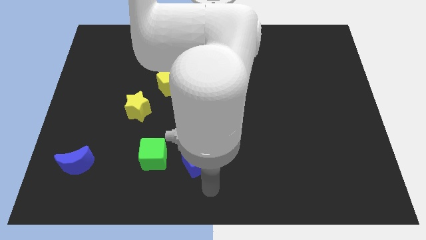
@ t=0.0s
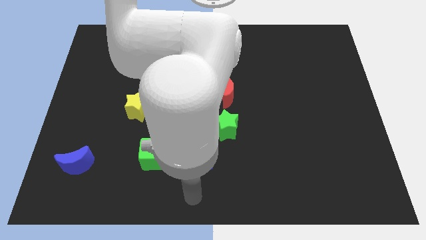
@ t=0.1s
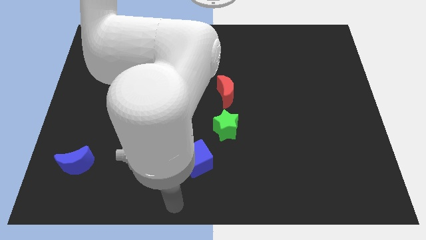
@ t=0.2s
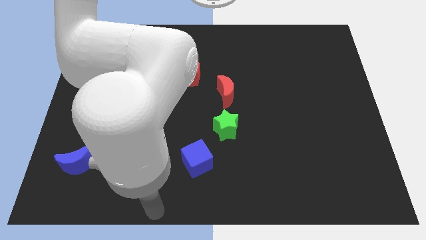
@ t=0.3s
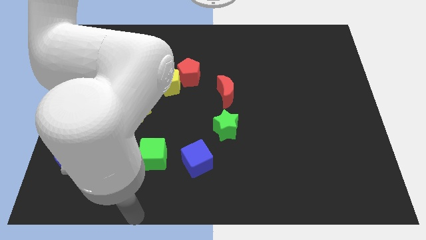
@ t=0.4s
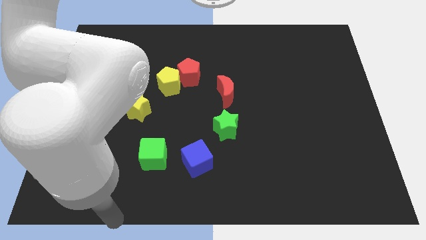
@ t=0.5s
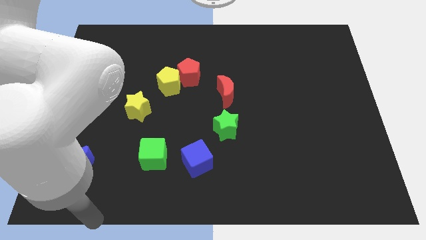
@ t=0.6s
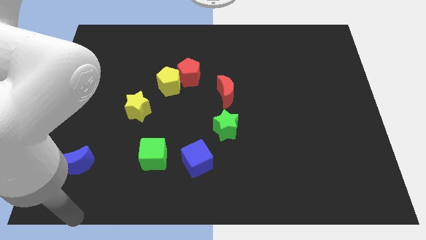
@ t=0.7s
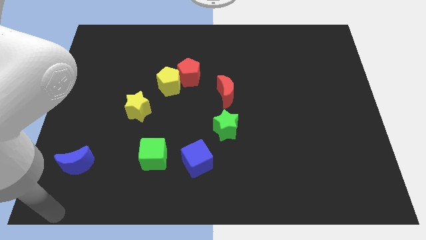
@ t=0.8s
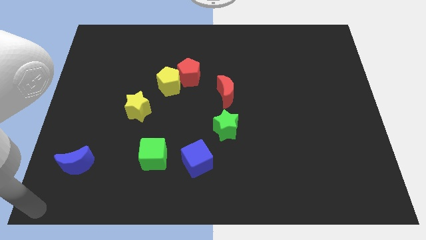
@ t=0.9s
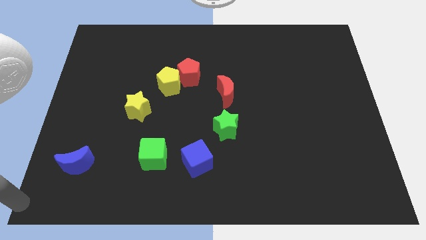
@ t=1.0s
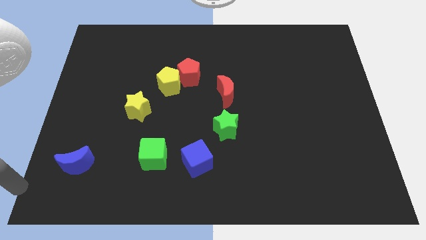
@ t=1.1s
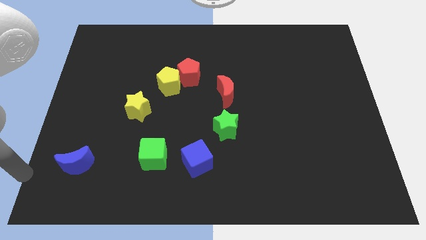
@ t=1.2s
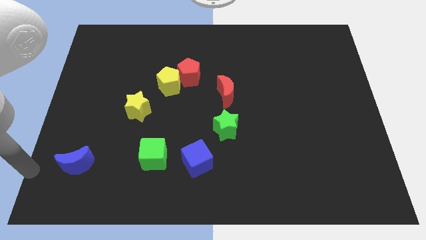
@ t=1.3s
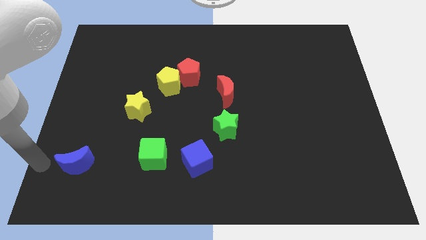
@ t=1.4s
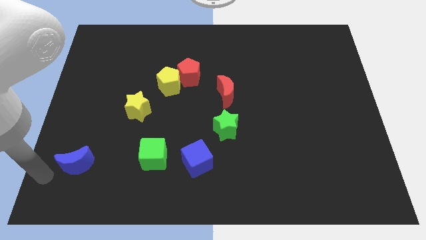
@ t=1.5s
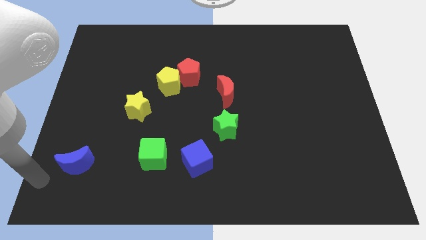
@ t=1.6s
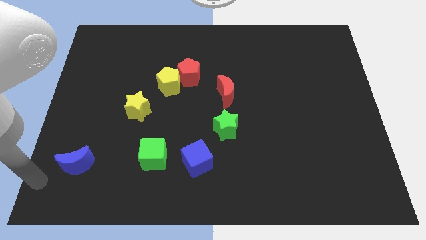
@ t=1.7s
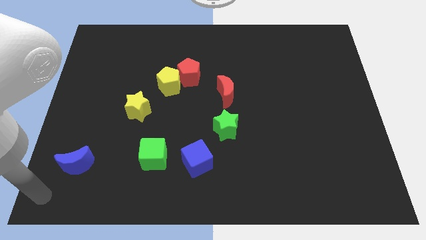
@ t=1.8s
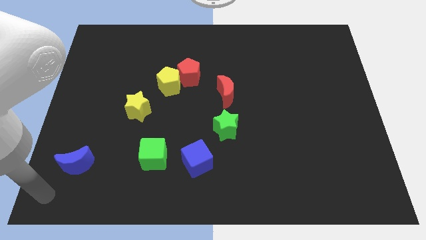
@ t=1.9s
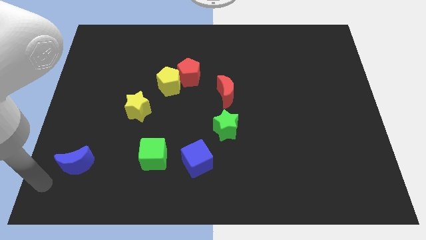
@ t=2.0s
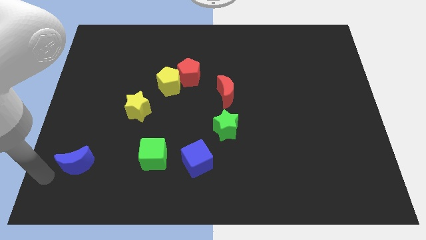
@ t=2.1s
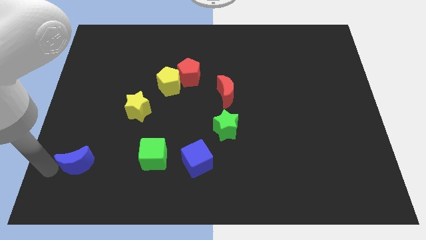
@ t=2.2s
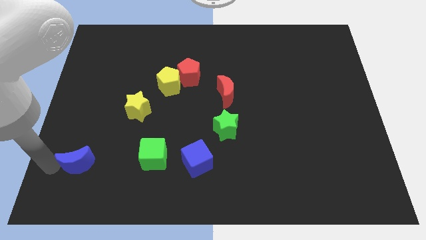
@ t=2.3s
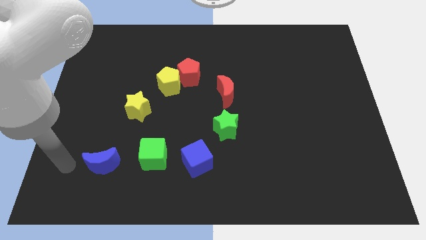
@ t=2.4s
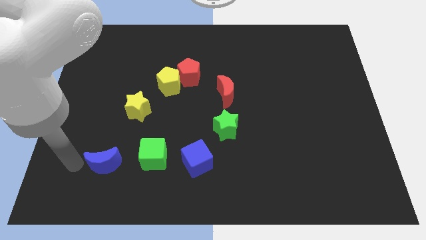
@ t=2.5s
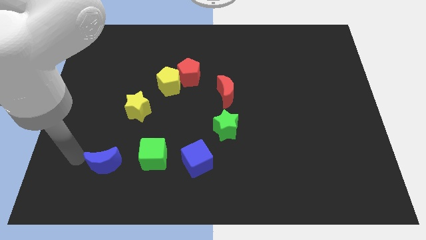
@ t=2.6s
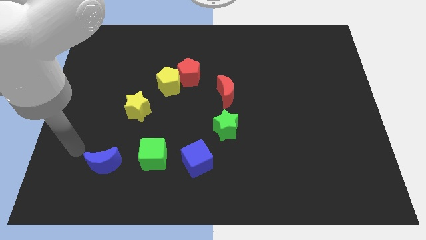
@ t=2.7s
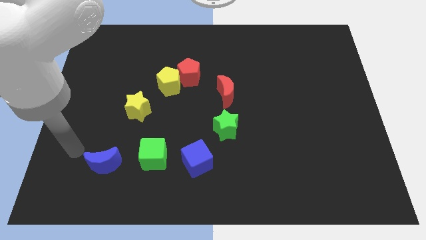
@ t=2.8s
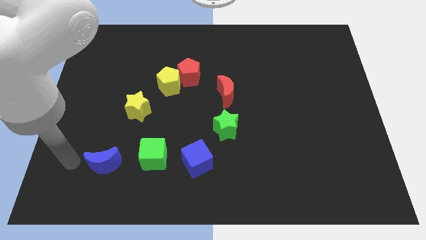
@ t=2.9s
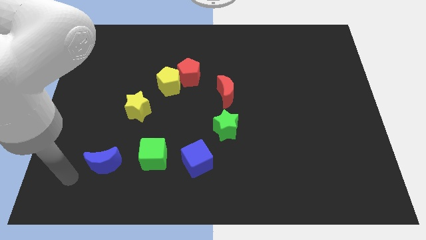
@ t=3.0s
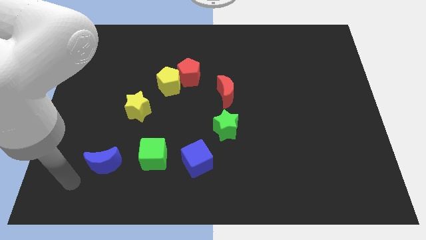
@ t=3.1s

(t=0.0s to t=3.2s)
push the blue moon to the left side of the green cube

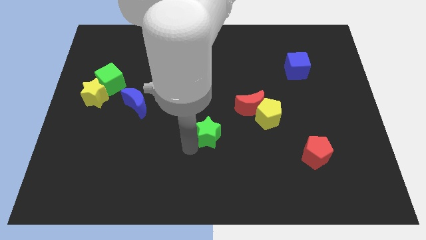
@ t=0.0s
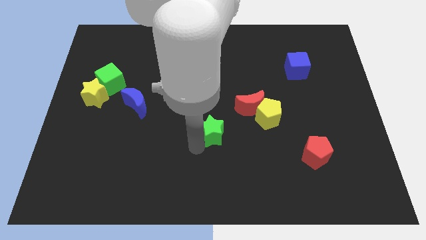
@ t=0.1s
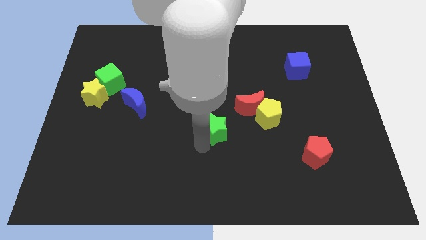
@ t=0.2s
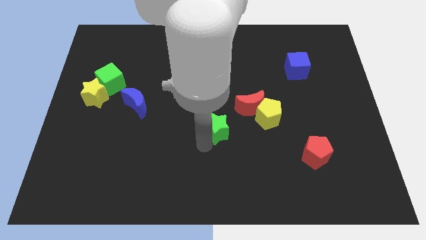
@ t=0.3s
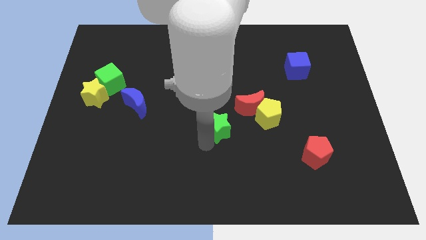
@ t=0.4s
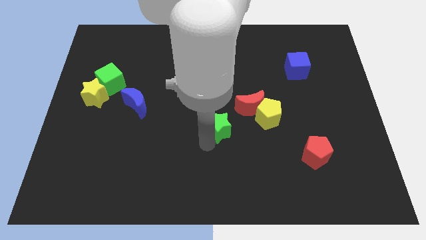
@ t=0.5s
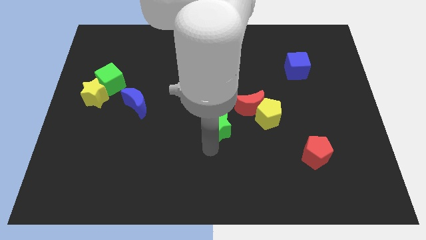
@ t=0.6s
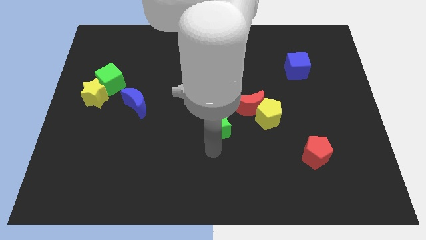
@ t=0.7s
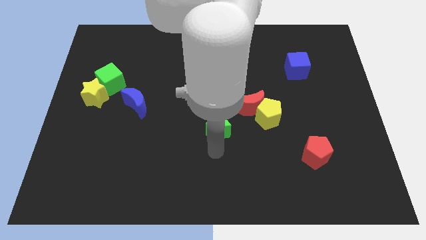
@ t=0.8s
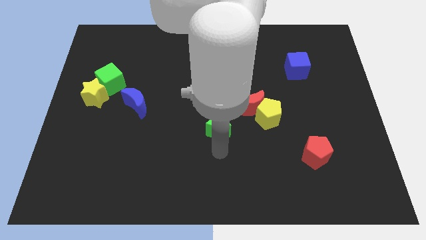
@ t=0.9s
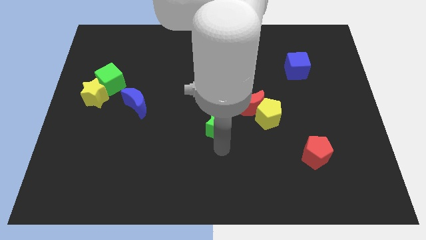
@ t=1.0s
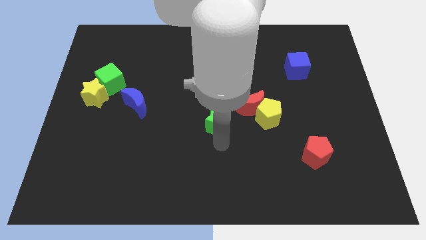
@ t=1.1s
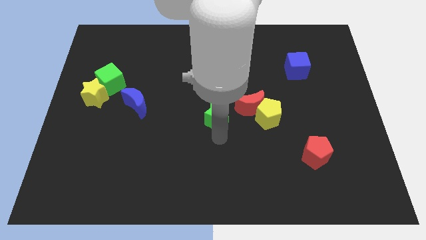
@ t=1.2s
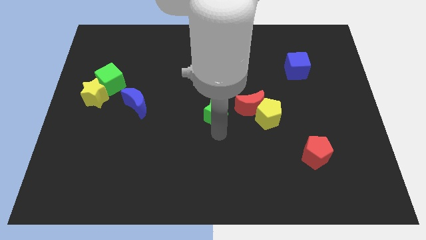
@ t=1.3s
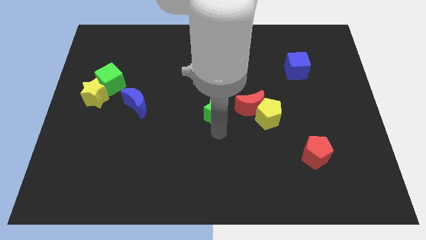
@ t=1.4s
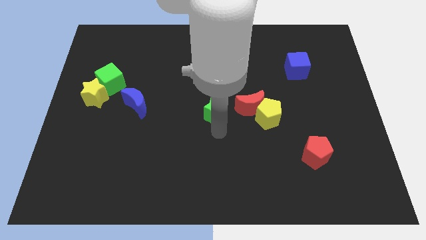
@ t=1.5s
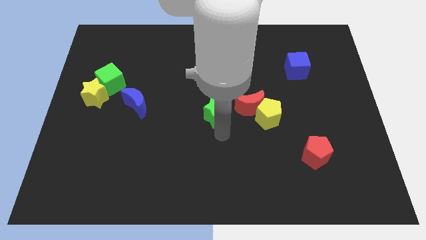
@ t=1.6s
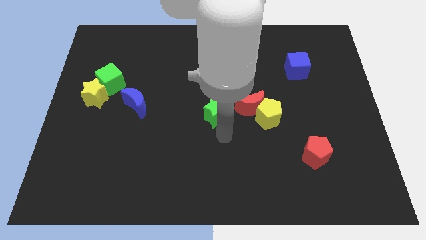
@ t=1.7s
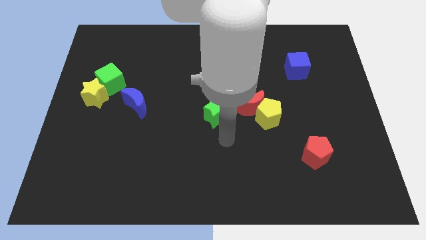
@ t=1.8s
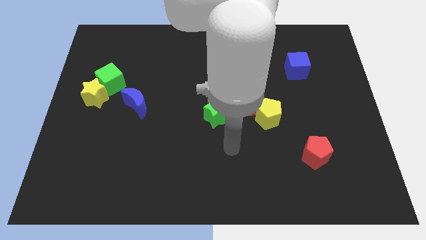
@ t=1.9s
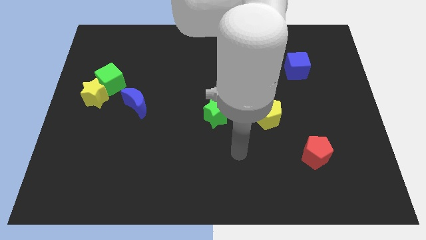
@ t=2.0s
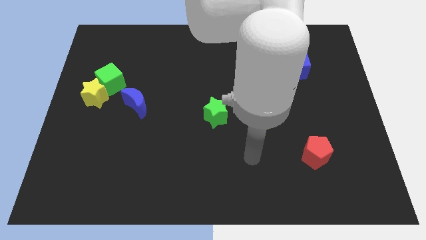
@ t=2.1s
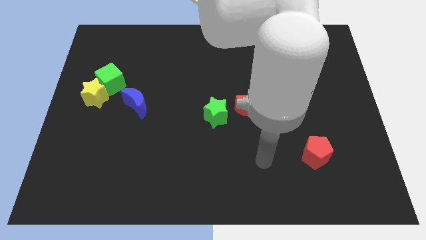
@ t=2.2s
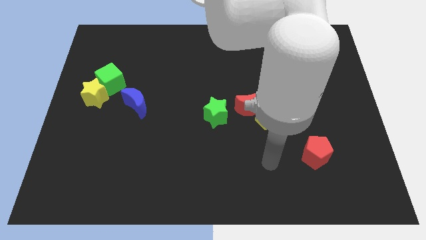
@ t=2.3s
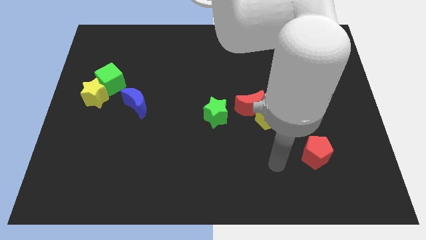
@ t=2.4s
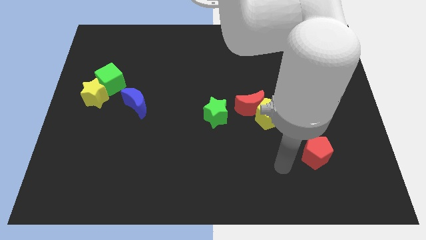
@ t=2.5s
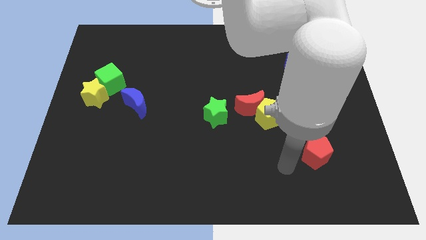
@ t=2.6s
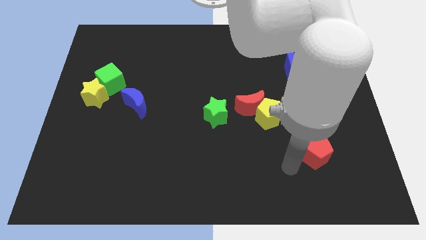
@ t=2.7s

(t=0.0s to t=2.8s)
place the green star to the left of the red moon

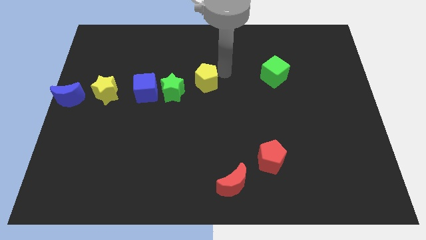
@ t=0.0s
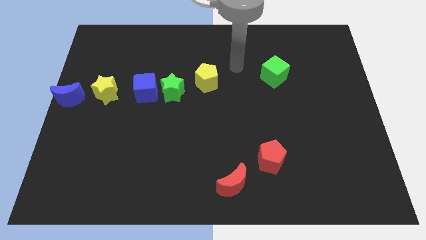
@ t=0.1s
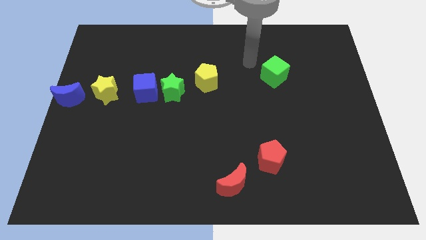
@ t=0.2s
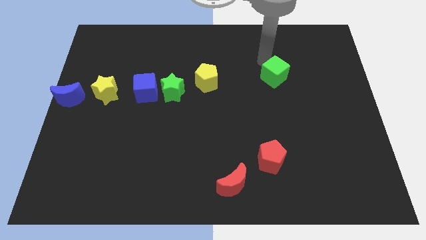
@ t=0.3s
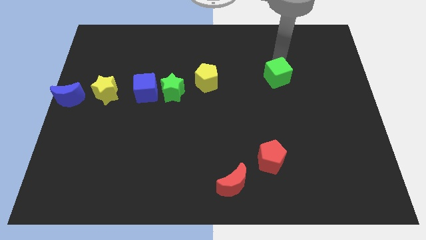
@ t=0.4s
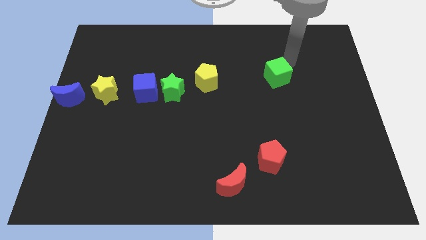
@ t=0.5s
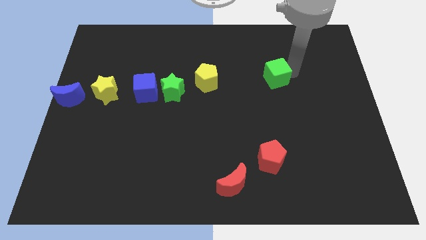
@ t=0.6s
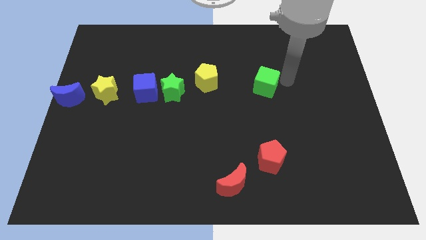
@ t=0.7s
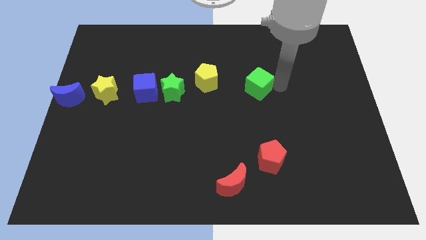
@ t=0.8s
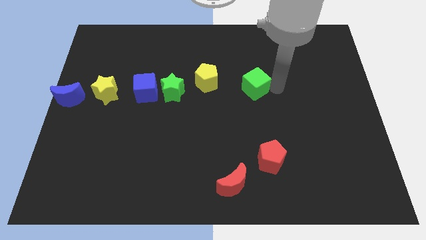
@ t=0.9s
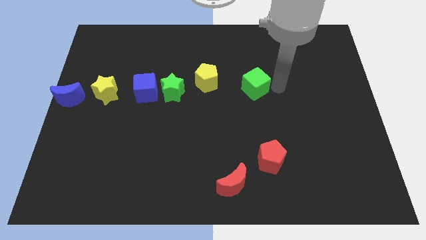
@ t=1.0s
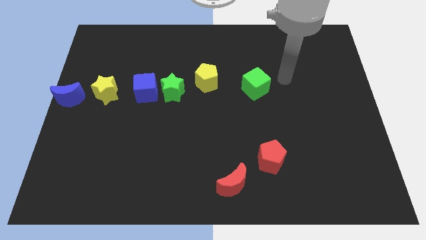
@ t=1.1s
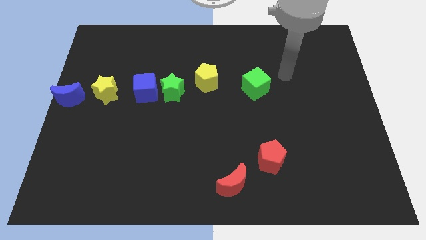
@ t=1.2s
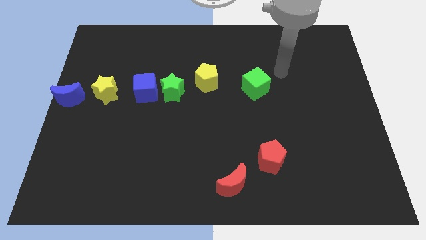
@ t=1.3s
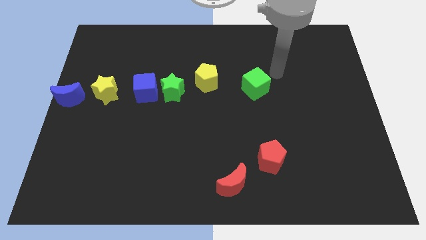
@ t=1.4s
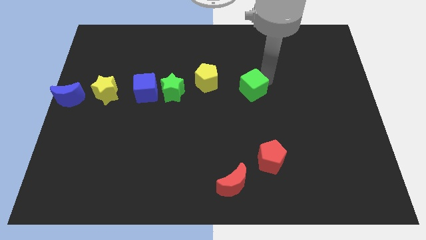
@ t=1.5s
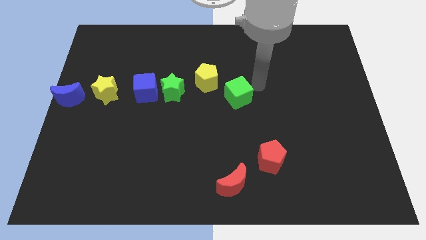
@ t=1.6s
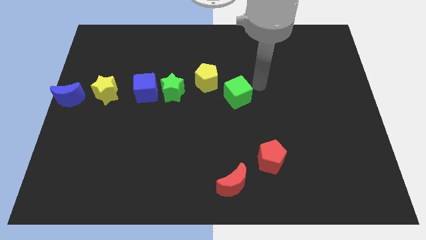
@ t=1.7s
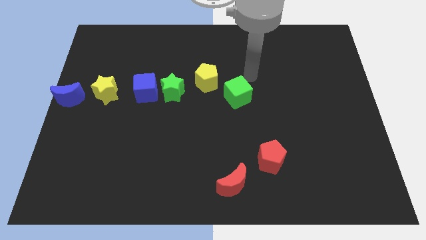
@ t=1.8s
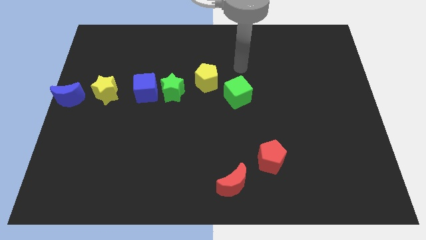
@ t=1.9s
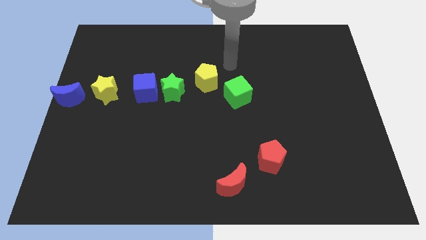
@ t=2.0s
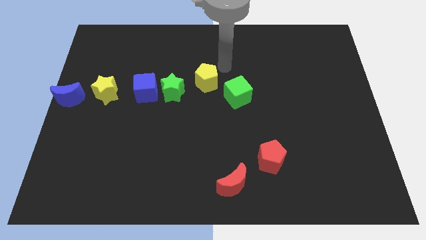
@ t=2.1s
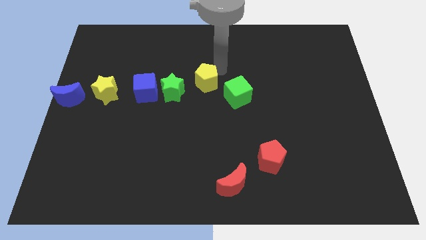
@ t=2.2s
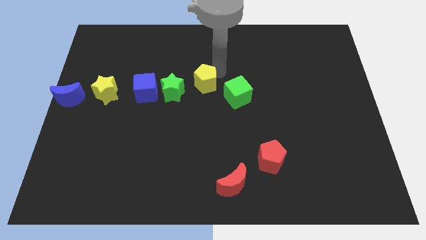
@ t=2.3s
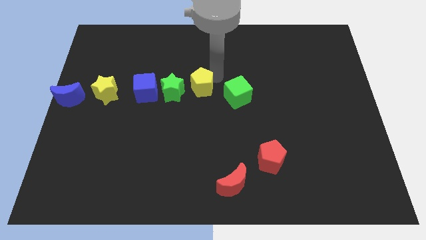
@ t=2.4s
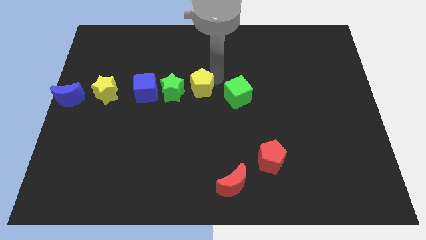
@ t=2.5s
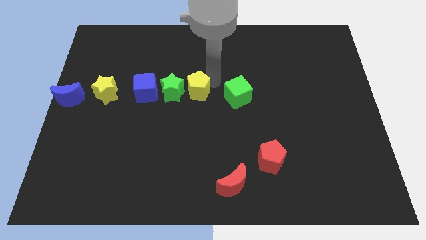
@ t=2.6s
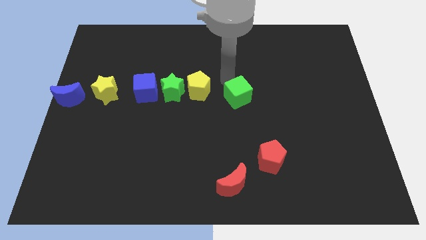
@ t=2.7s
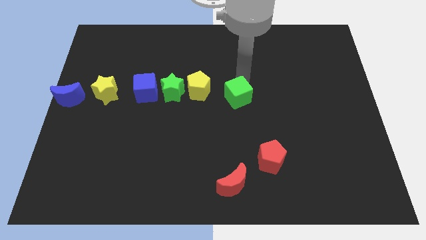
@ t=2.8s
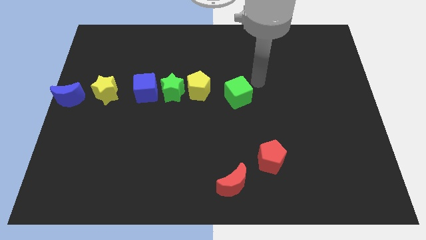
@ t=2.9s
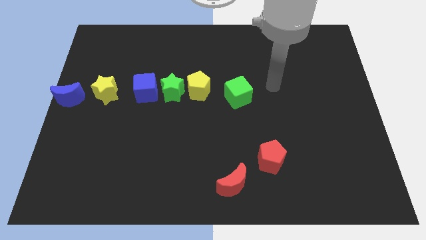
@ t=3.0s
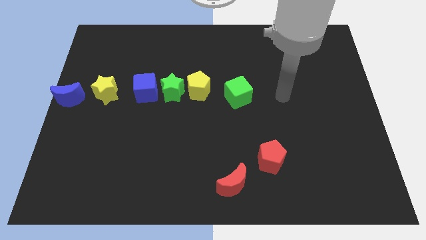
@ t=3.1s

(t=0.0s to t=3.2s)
slightly push the yellow pentagon and the green cube right to the green star
